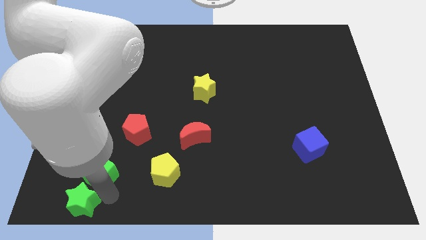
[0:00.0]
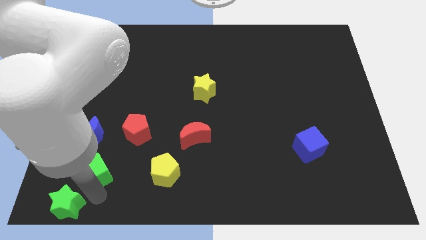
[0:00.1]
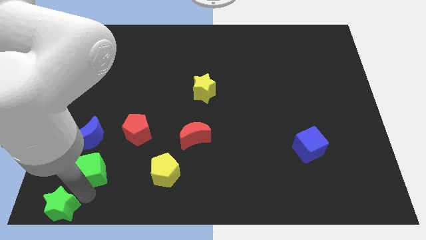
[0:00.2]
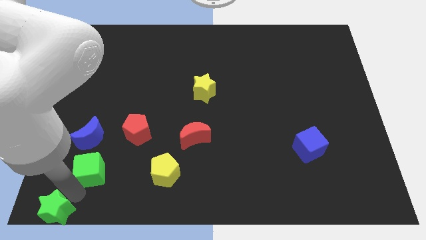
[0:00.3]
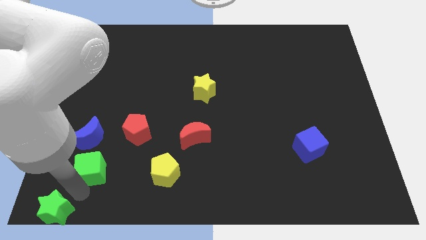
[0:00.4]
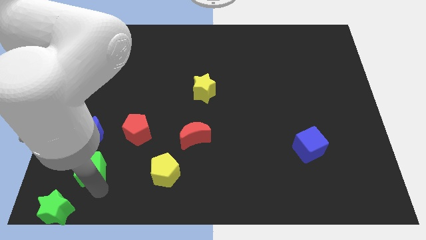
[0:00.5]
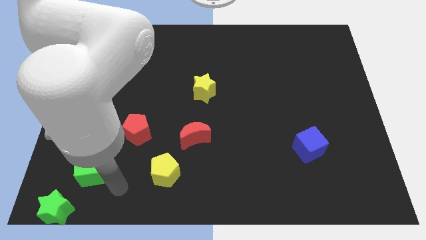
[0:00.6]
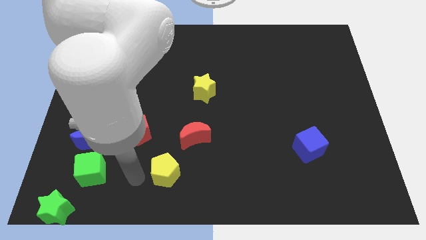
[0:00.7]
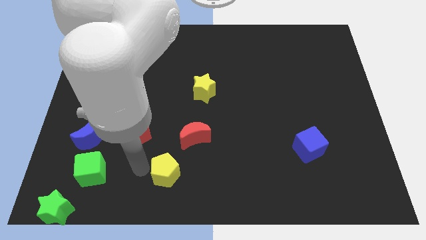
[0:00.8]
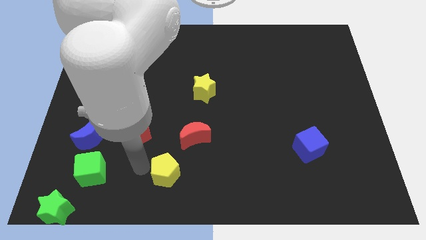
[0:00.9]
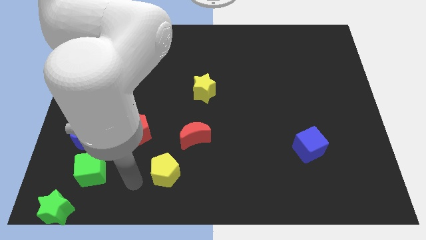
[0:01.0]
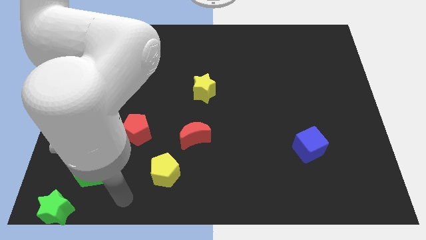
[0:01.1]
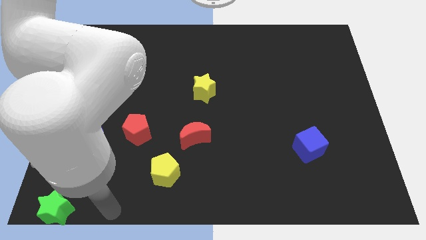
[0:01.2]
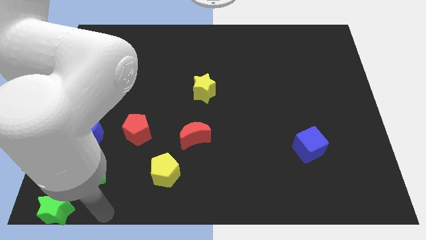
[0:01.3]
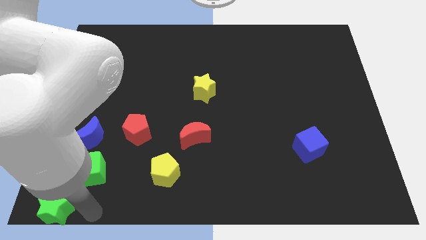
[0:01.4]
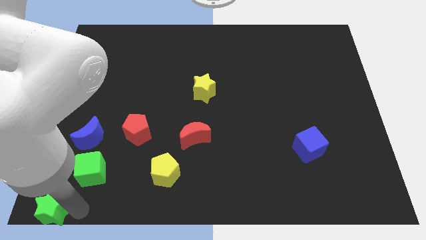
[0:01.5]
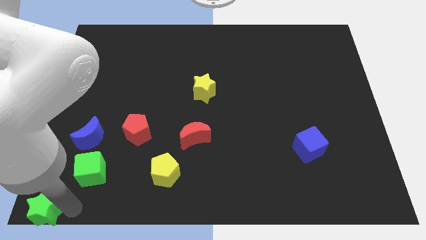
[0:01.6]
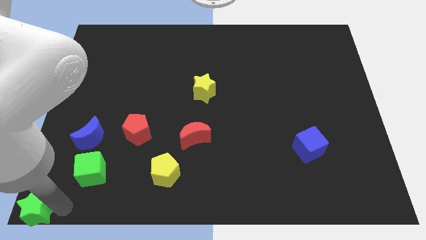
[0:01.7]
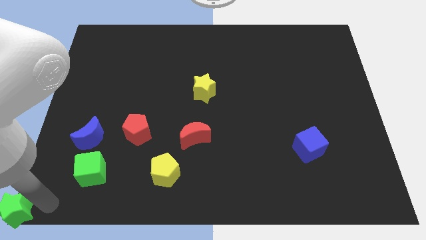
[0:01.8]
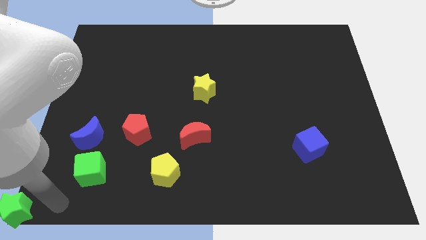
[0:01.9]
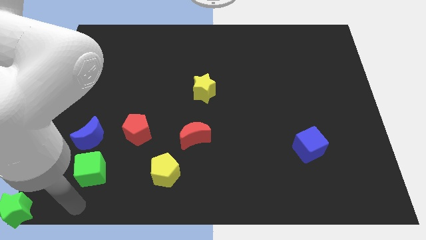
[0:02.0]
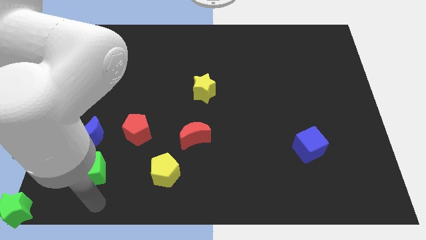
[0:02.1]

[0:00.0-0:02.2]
move the green star to the bottom left corner

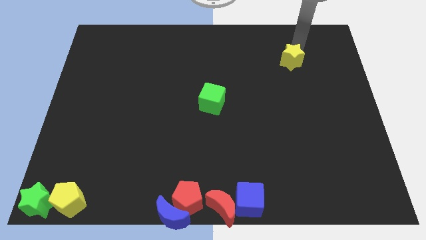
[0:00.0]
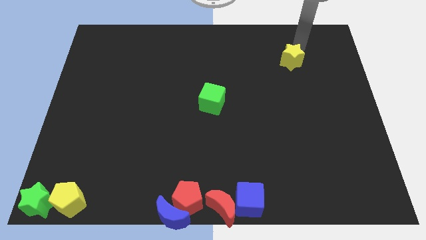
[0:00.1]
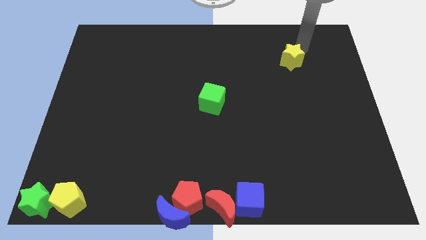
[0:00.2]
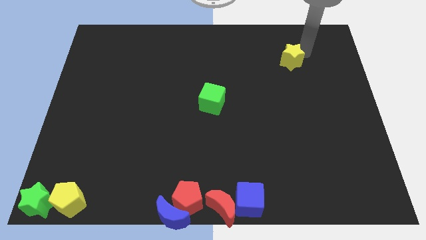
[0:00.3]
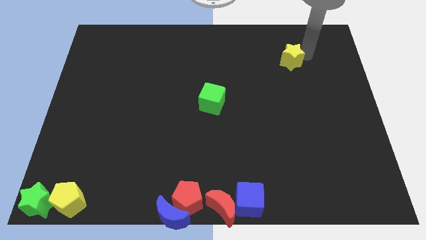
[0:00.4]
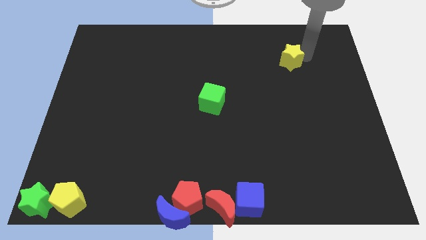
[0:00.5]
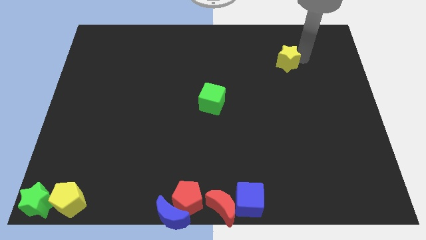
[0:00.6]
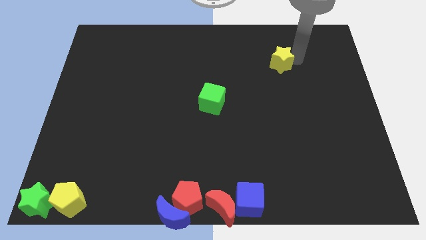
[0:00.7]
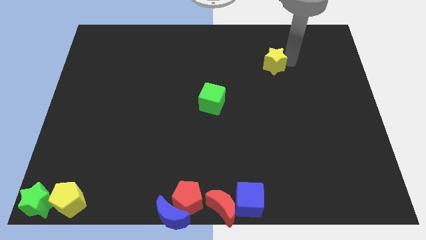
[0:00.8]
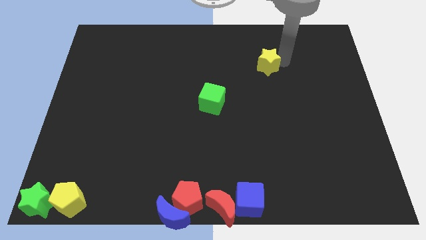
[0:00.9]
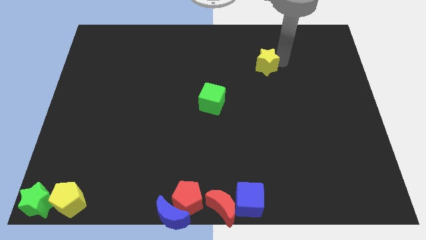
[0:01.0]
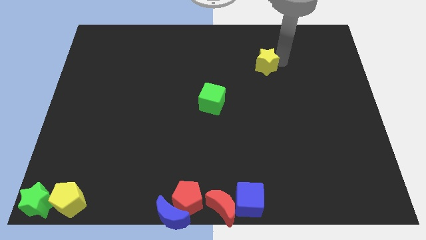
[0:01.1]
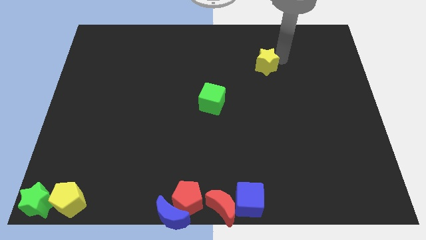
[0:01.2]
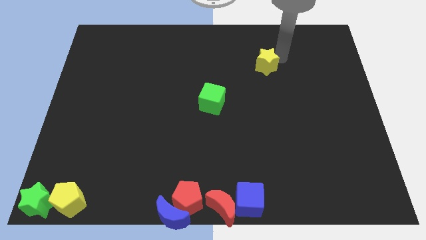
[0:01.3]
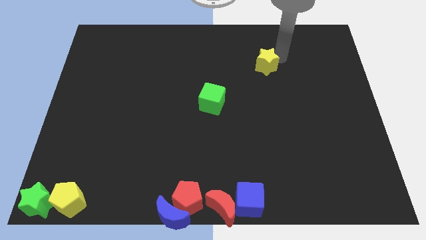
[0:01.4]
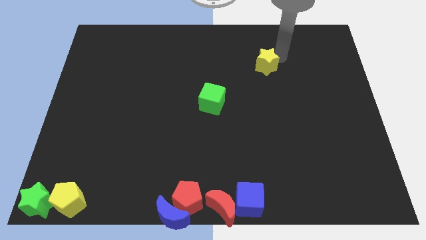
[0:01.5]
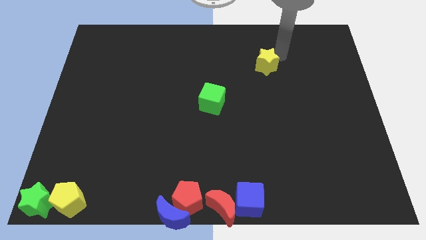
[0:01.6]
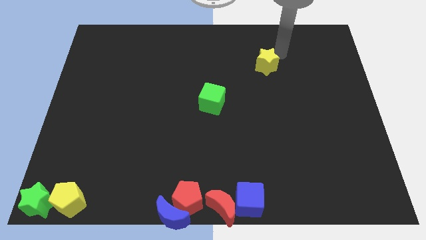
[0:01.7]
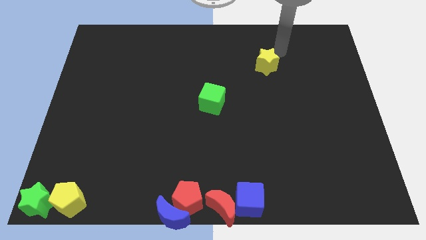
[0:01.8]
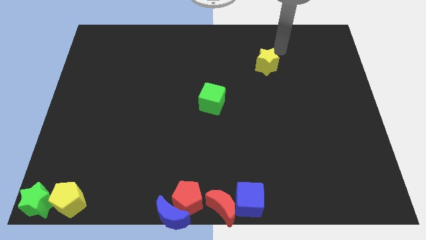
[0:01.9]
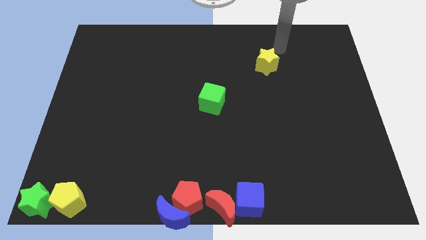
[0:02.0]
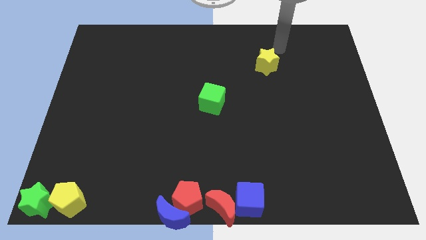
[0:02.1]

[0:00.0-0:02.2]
move the yellow star to the left

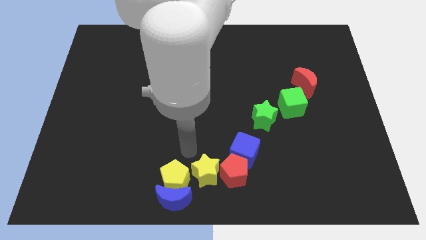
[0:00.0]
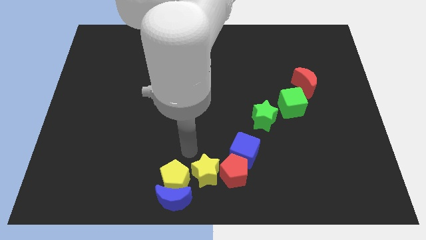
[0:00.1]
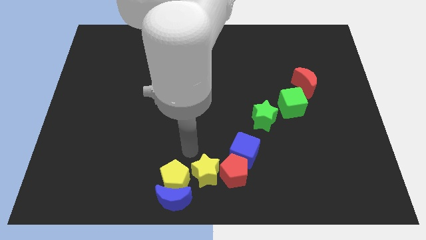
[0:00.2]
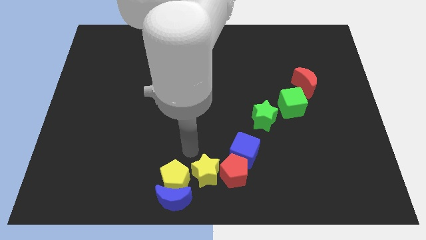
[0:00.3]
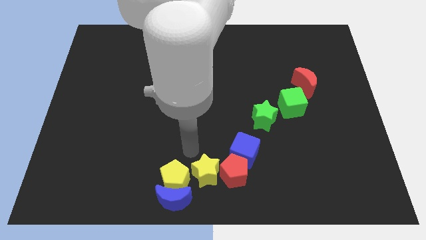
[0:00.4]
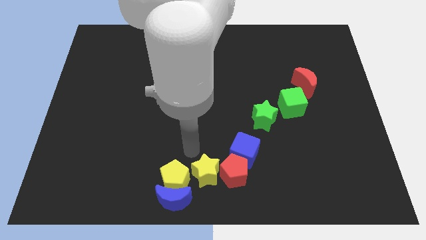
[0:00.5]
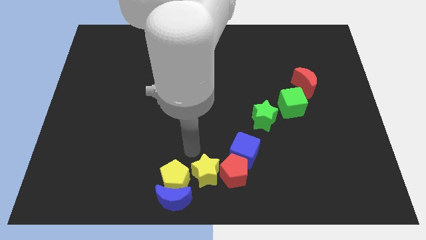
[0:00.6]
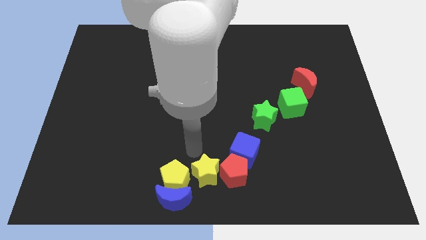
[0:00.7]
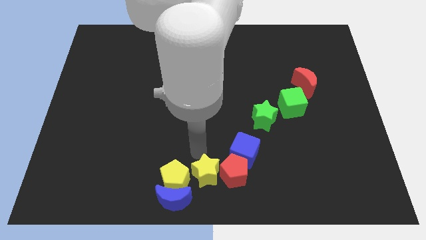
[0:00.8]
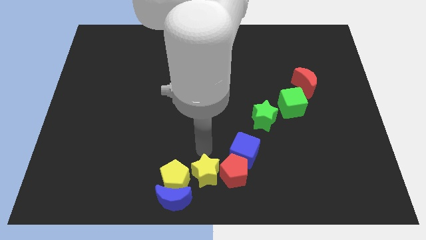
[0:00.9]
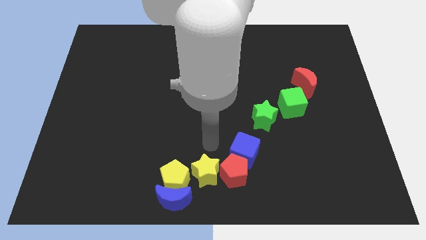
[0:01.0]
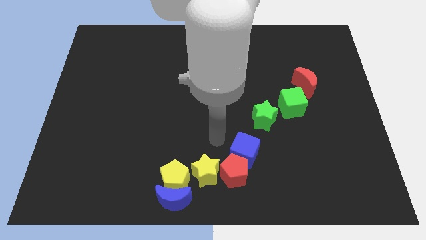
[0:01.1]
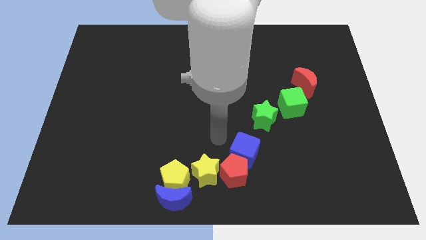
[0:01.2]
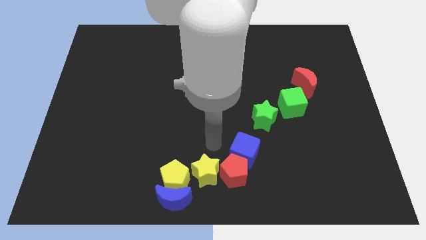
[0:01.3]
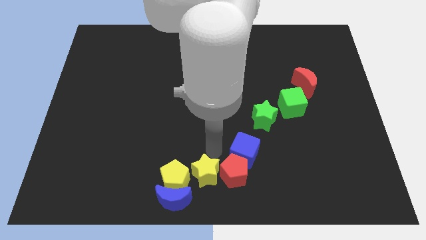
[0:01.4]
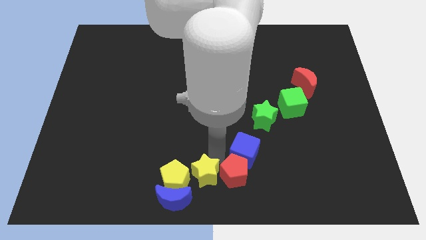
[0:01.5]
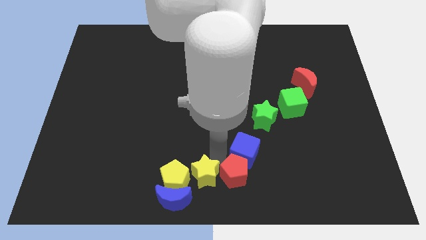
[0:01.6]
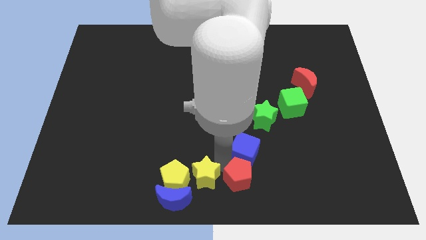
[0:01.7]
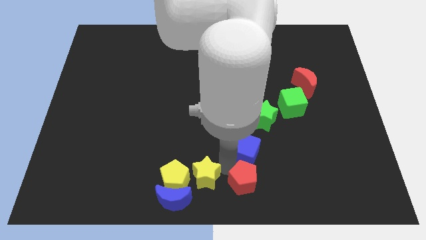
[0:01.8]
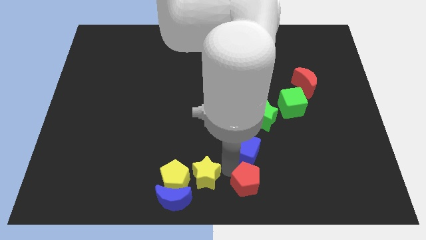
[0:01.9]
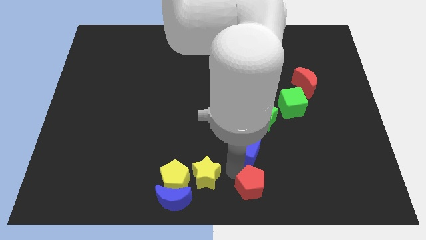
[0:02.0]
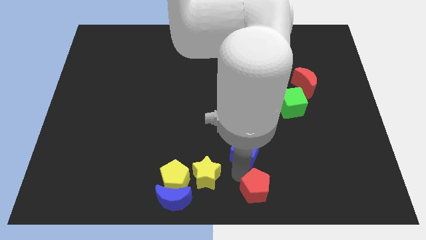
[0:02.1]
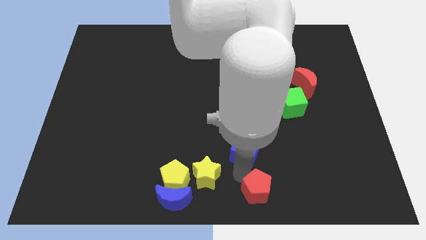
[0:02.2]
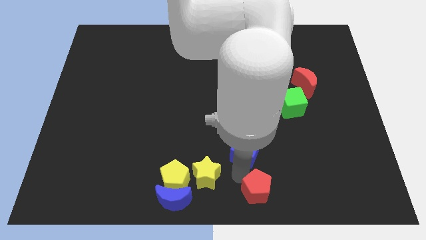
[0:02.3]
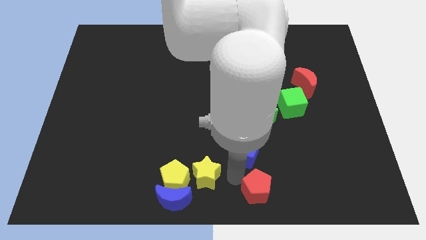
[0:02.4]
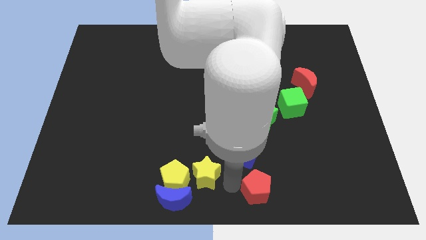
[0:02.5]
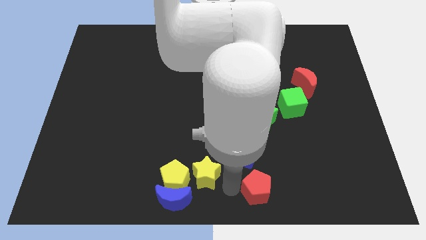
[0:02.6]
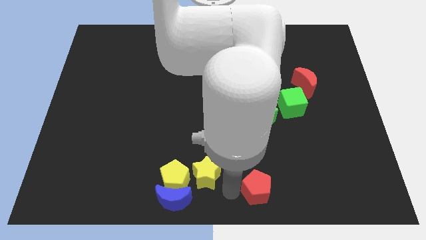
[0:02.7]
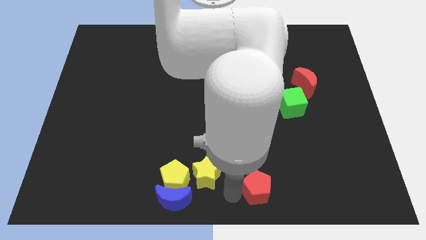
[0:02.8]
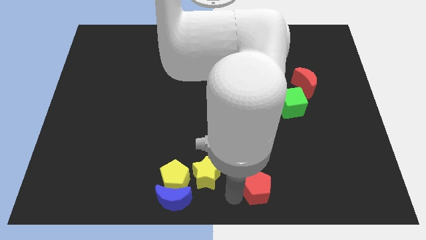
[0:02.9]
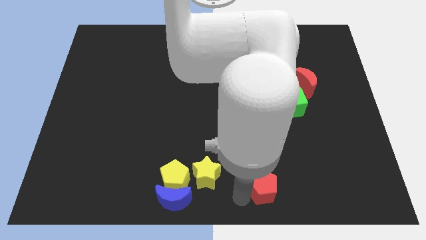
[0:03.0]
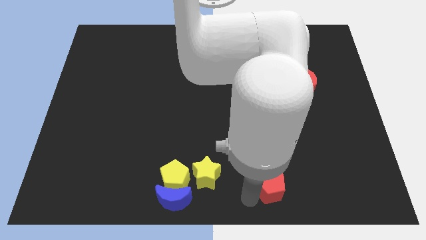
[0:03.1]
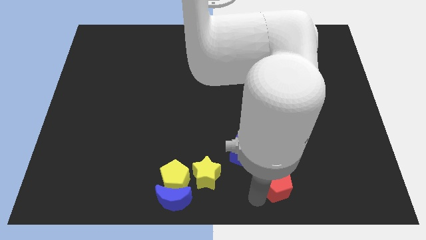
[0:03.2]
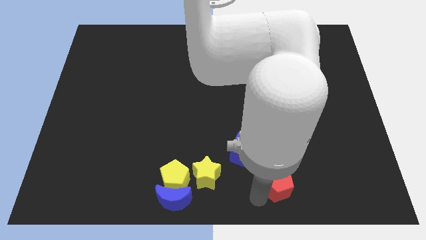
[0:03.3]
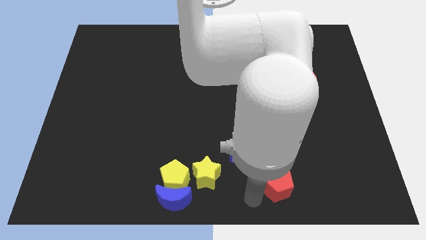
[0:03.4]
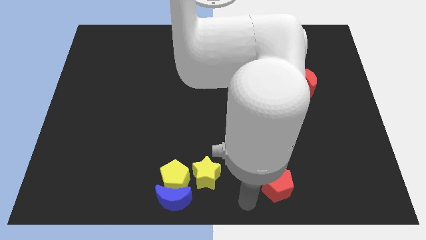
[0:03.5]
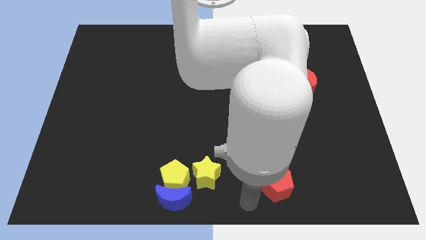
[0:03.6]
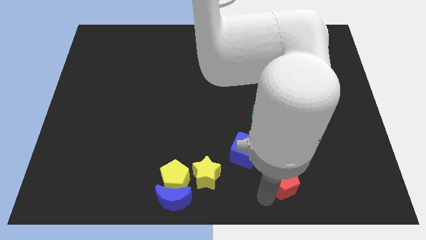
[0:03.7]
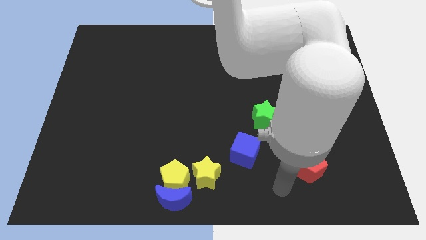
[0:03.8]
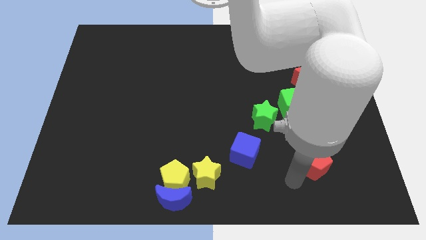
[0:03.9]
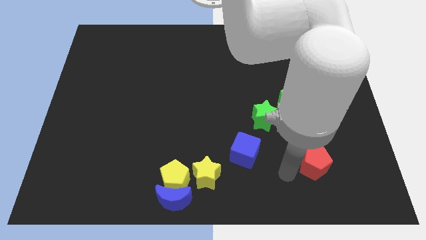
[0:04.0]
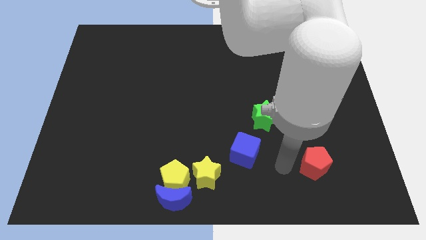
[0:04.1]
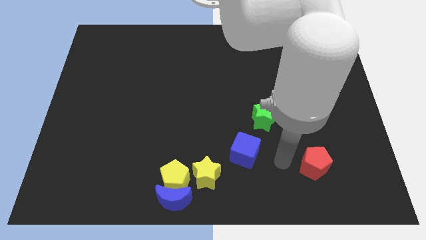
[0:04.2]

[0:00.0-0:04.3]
move the red pentagon away from the blue cube

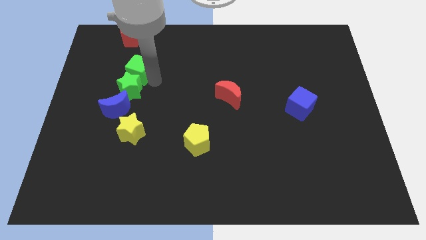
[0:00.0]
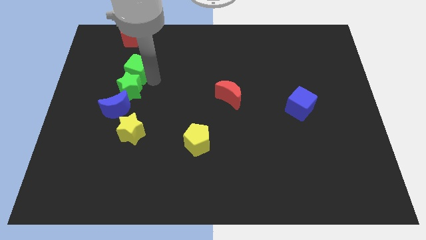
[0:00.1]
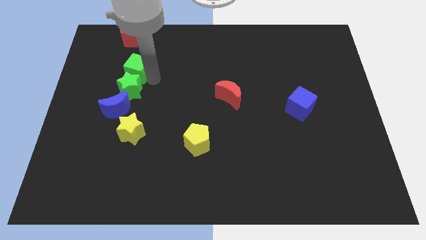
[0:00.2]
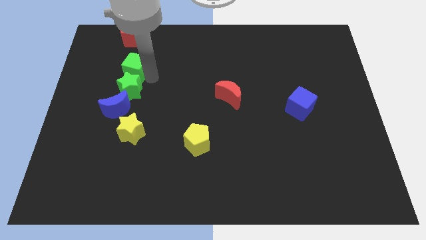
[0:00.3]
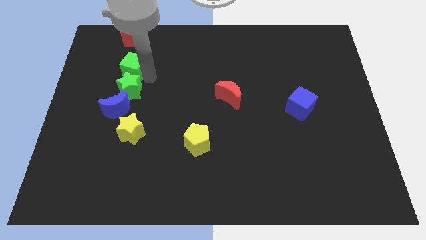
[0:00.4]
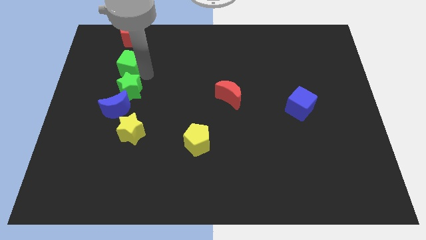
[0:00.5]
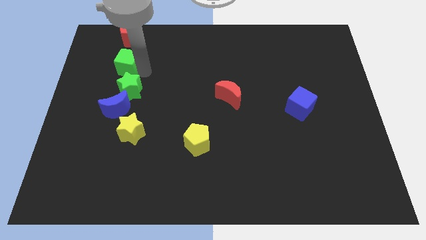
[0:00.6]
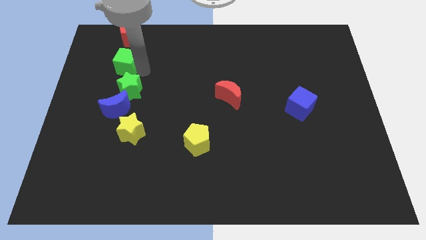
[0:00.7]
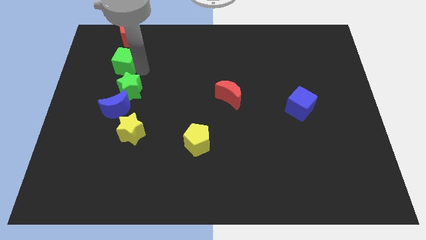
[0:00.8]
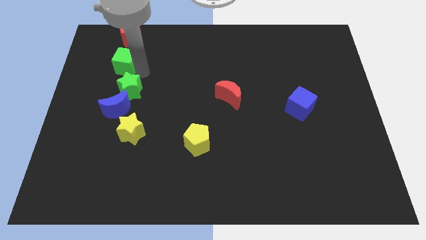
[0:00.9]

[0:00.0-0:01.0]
move the green cube below the red pentagon
